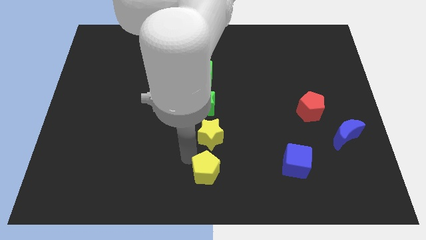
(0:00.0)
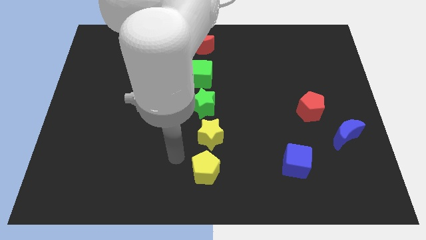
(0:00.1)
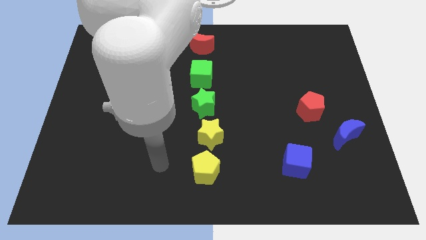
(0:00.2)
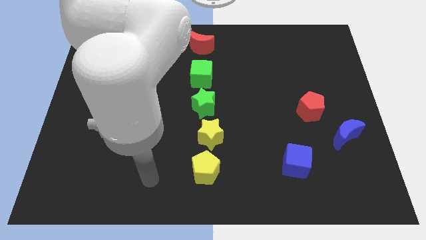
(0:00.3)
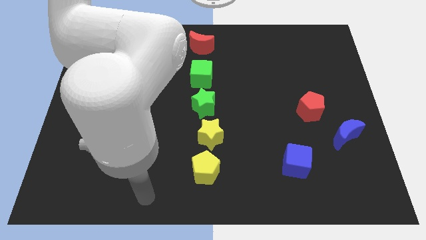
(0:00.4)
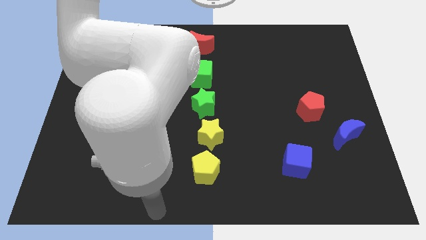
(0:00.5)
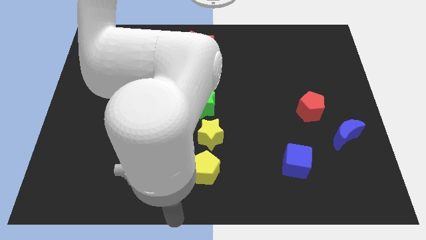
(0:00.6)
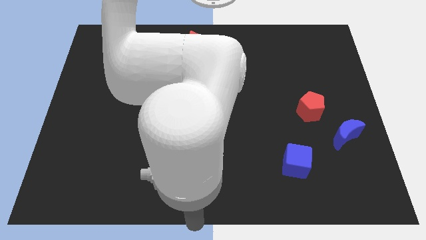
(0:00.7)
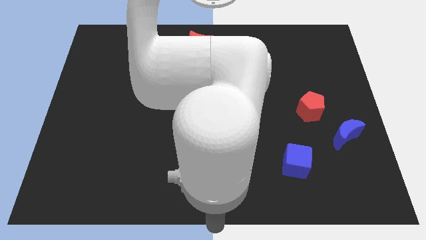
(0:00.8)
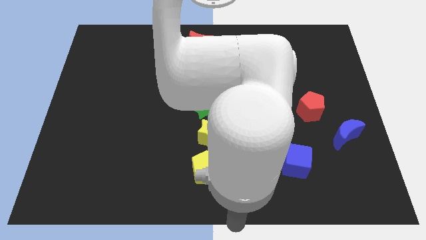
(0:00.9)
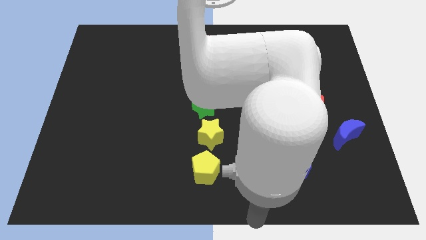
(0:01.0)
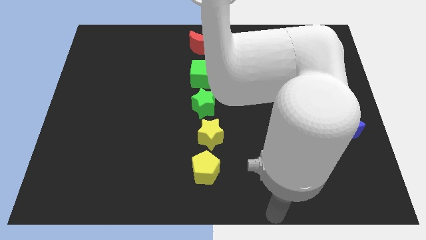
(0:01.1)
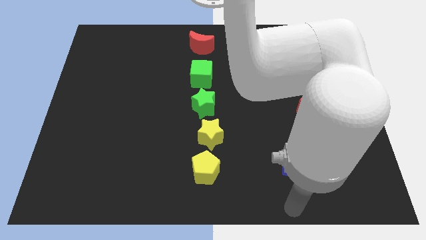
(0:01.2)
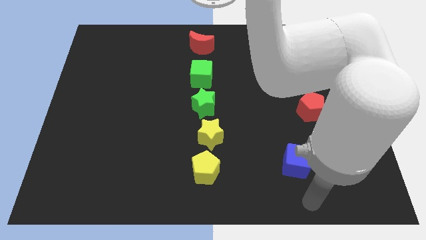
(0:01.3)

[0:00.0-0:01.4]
move your hand away from the yellow pentagon

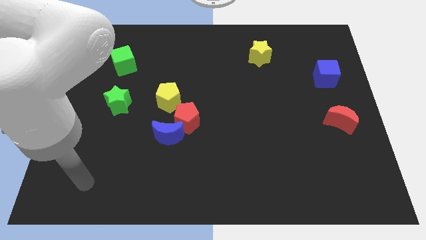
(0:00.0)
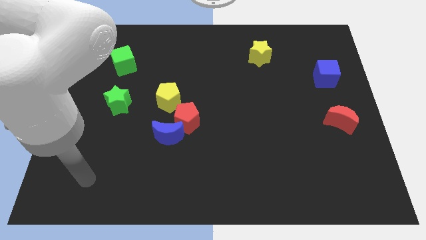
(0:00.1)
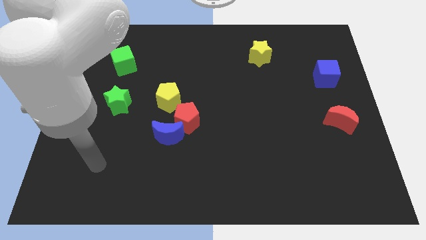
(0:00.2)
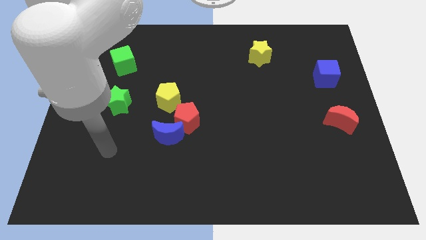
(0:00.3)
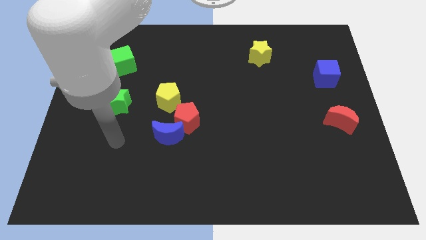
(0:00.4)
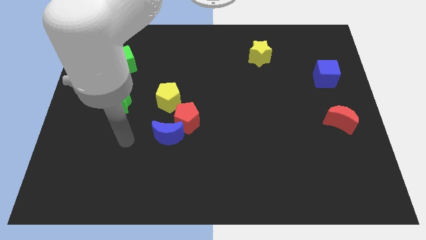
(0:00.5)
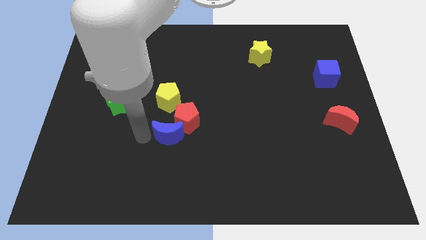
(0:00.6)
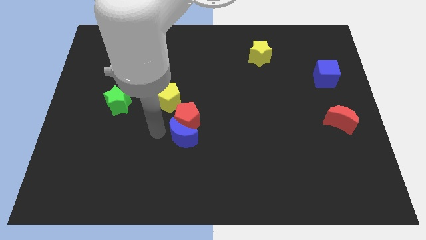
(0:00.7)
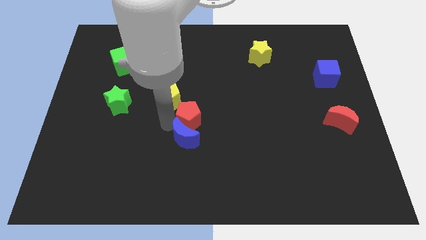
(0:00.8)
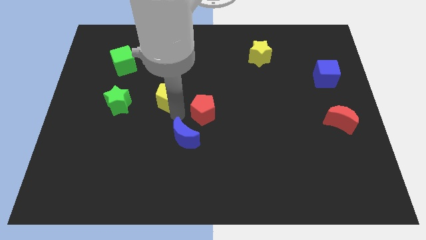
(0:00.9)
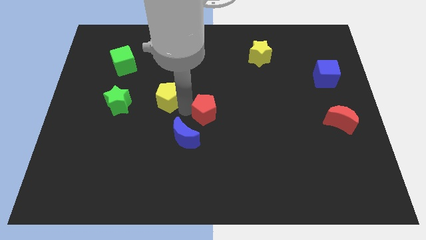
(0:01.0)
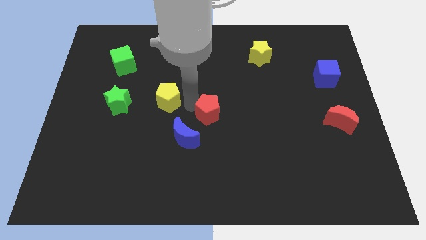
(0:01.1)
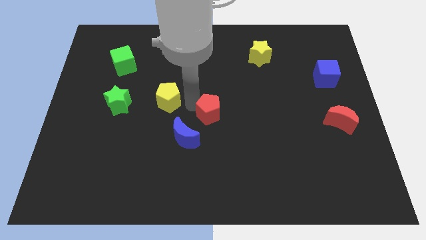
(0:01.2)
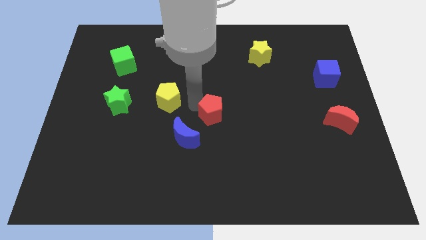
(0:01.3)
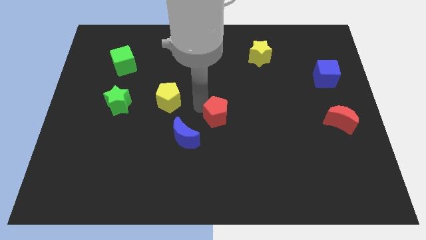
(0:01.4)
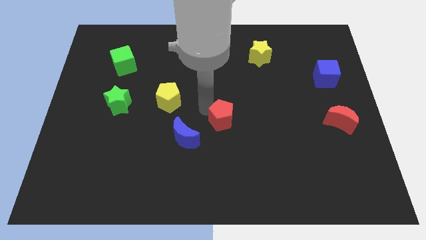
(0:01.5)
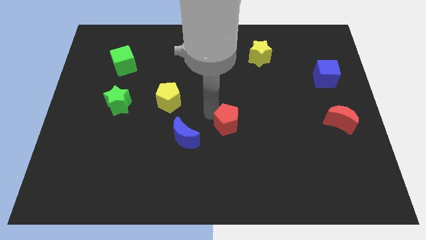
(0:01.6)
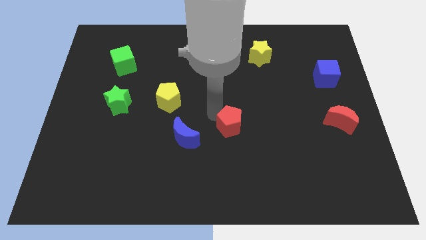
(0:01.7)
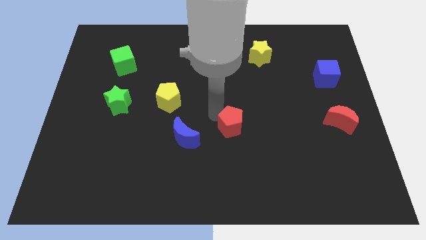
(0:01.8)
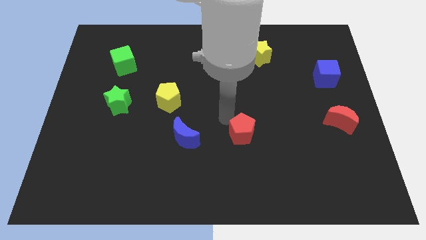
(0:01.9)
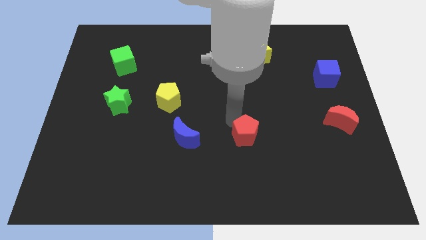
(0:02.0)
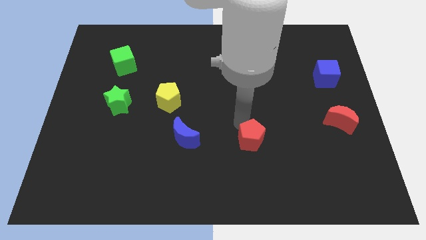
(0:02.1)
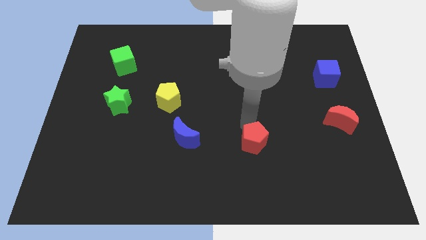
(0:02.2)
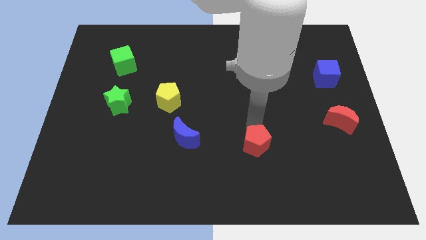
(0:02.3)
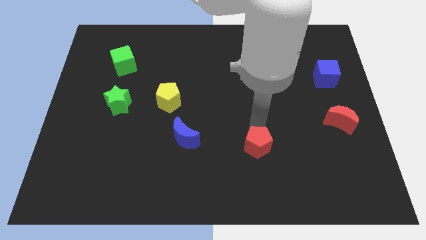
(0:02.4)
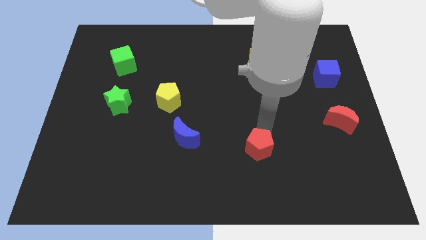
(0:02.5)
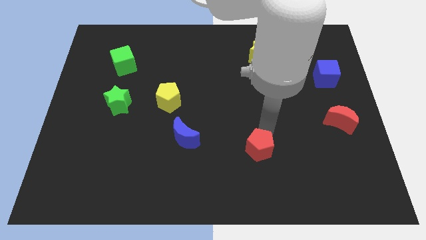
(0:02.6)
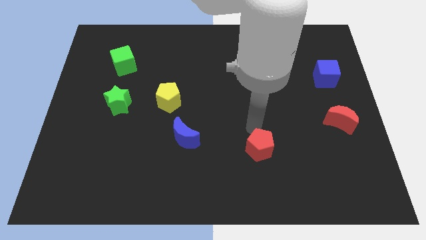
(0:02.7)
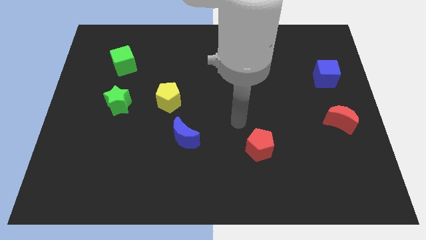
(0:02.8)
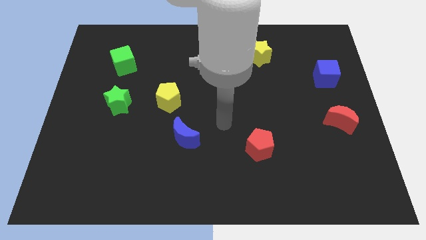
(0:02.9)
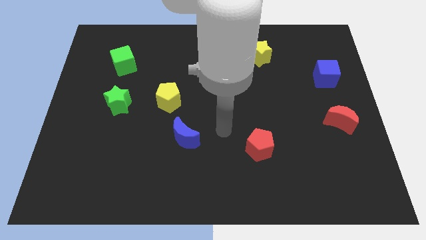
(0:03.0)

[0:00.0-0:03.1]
push the red pentagon to the bottom right side of the blue moon

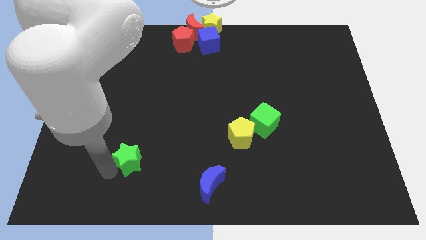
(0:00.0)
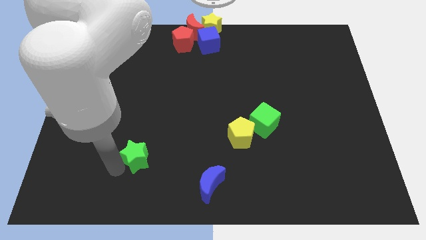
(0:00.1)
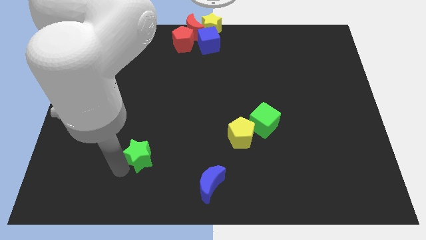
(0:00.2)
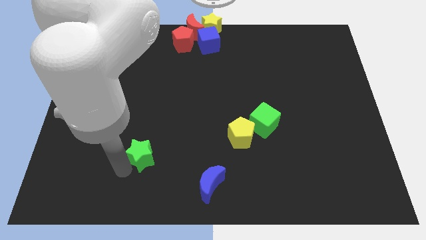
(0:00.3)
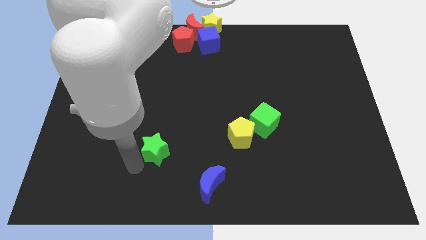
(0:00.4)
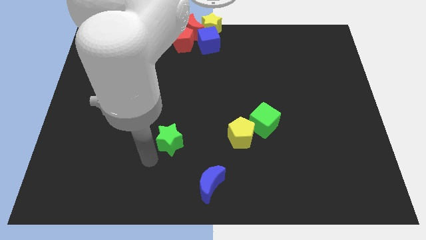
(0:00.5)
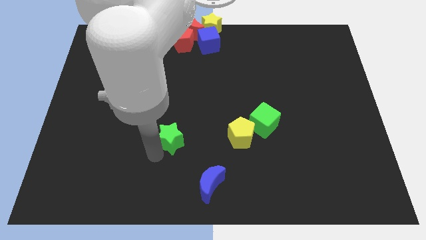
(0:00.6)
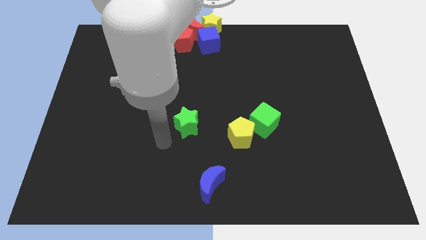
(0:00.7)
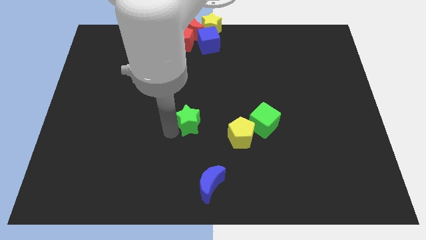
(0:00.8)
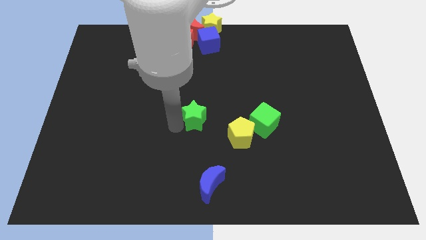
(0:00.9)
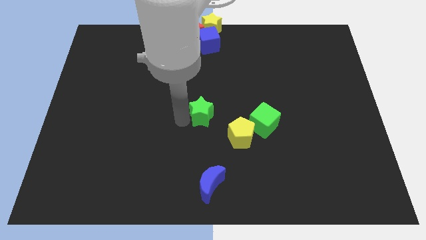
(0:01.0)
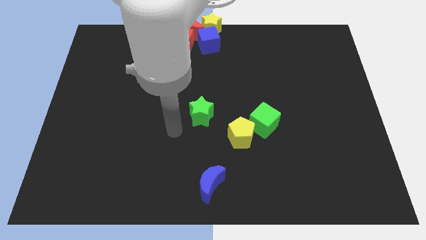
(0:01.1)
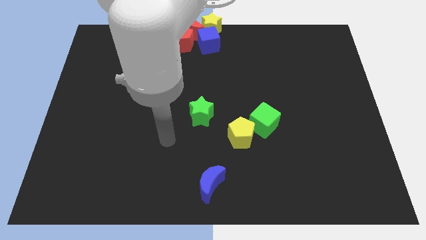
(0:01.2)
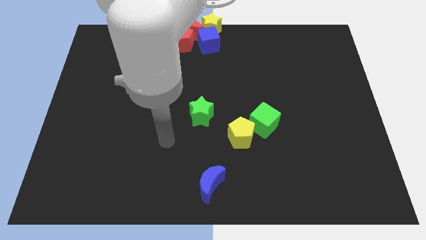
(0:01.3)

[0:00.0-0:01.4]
slide the green star to the center of the board

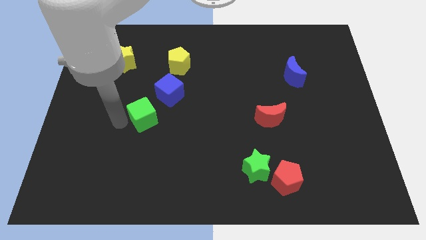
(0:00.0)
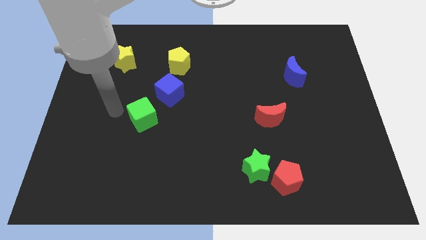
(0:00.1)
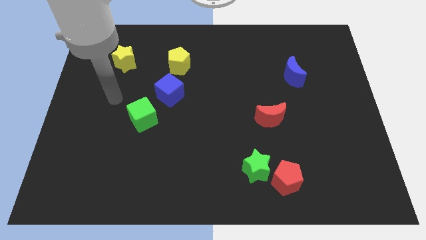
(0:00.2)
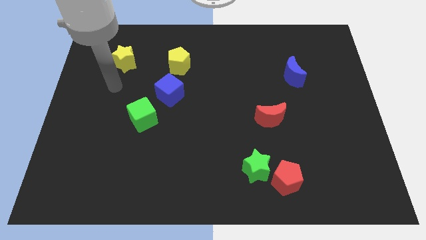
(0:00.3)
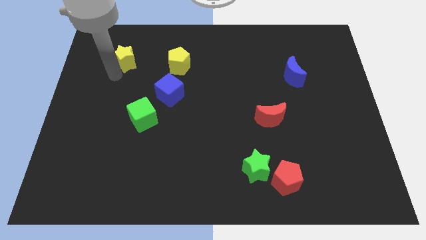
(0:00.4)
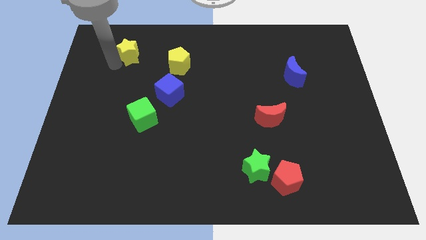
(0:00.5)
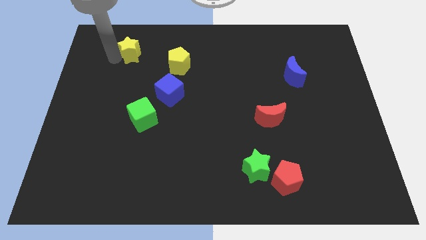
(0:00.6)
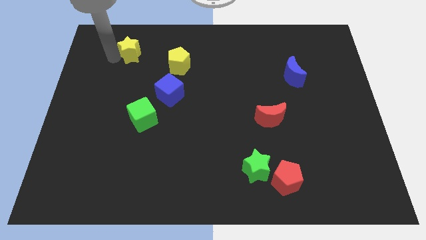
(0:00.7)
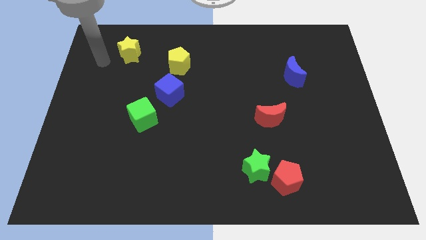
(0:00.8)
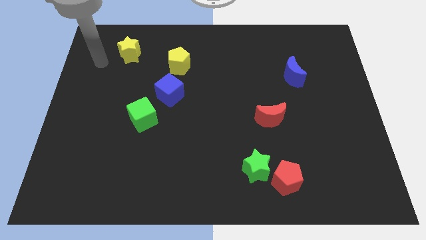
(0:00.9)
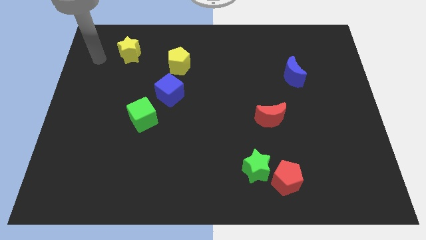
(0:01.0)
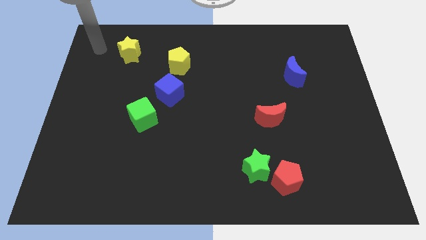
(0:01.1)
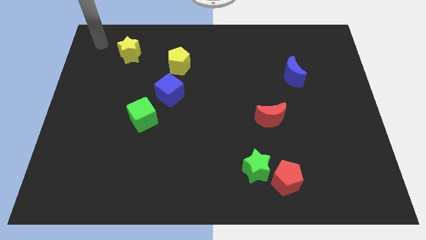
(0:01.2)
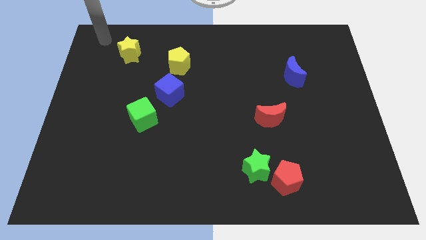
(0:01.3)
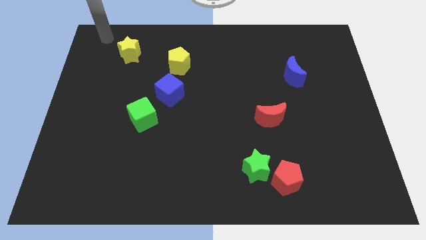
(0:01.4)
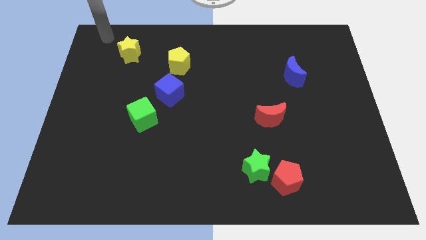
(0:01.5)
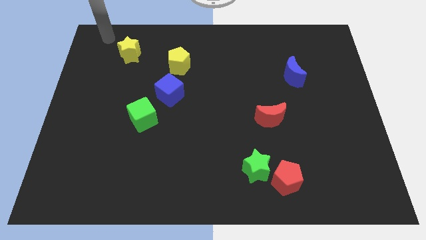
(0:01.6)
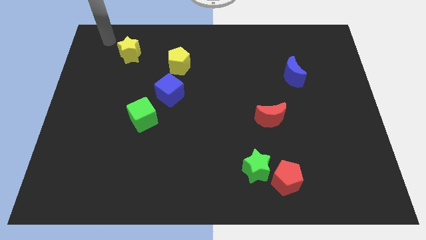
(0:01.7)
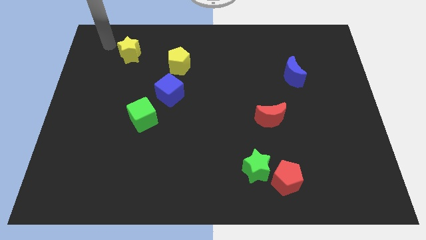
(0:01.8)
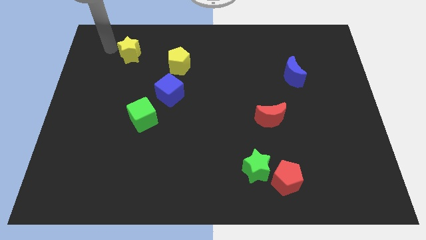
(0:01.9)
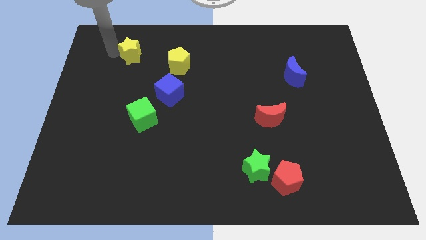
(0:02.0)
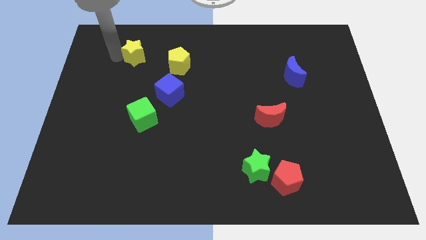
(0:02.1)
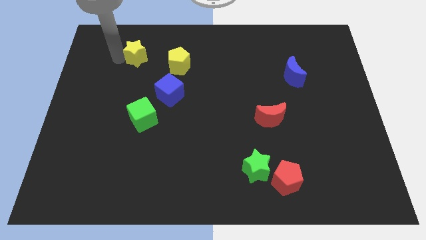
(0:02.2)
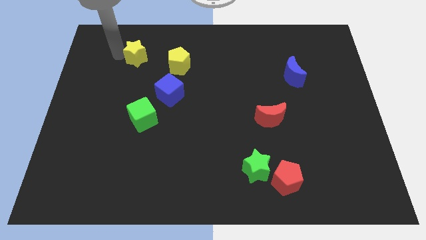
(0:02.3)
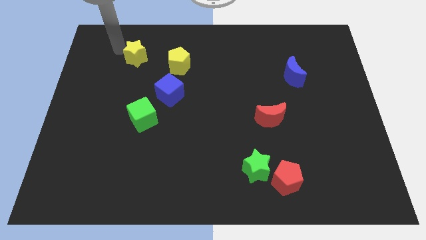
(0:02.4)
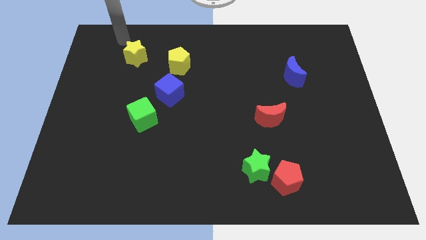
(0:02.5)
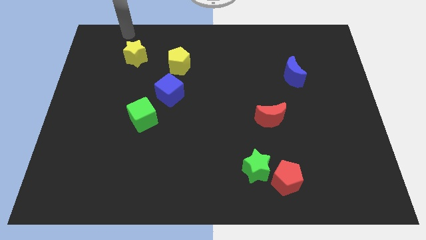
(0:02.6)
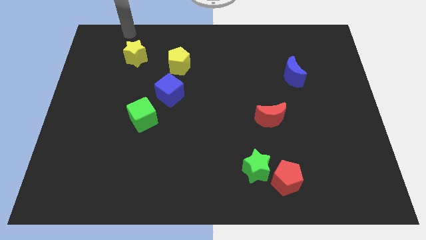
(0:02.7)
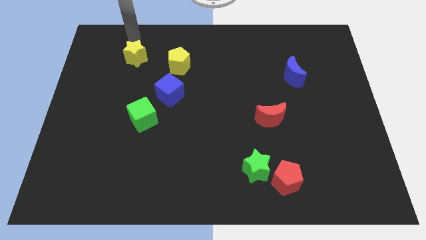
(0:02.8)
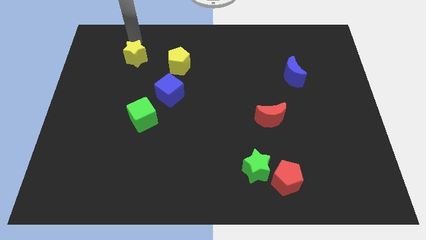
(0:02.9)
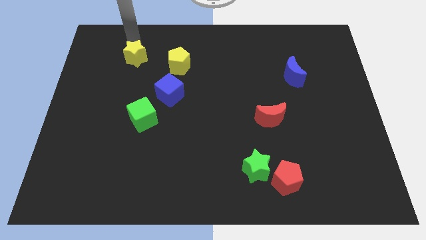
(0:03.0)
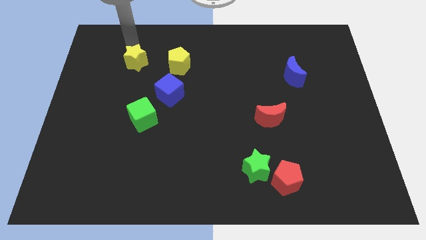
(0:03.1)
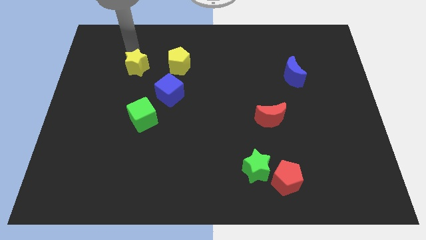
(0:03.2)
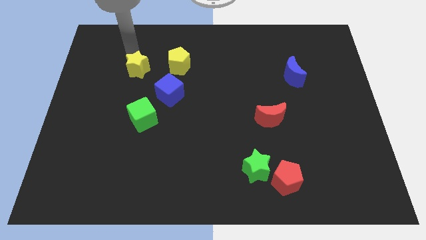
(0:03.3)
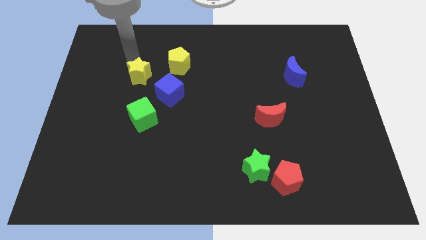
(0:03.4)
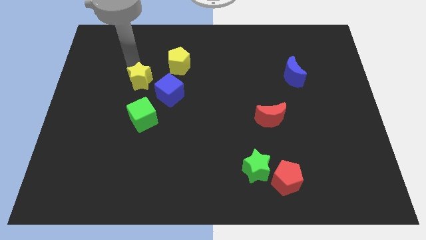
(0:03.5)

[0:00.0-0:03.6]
push the yellow star to the left of the blue cube
